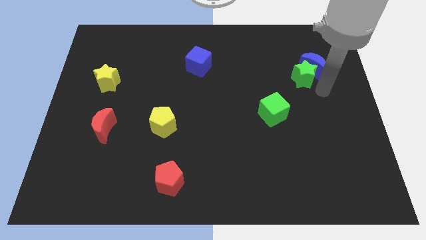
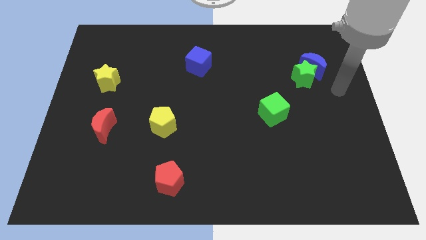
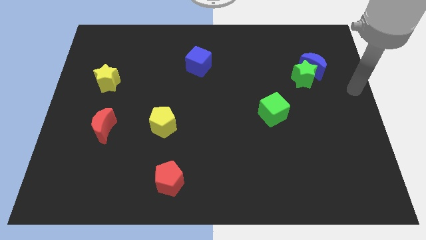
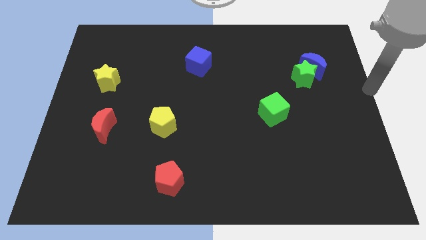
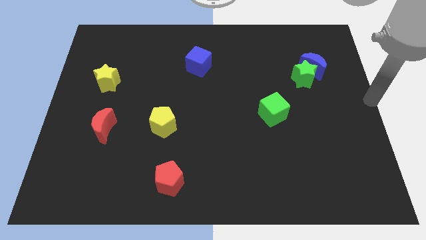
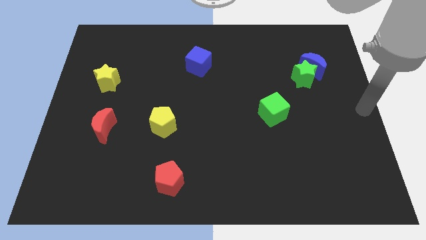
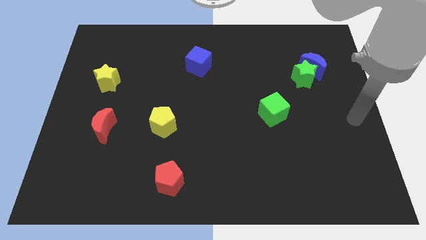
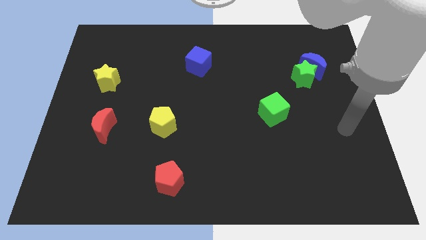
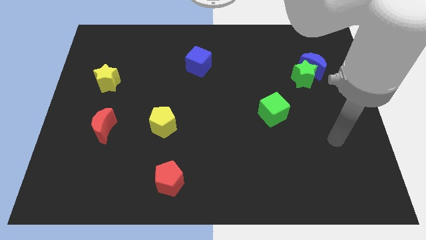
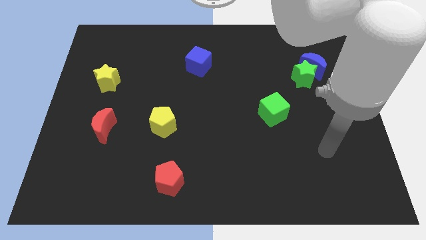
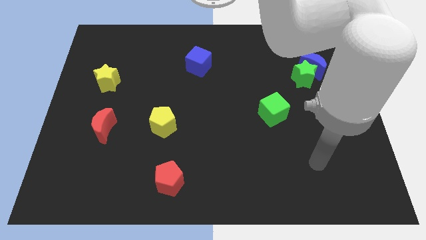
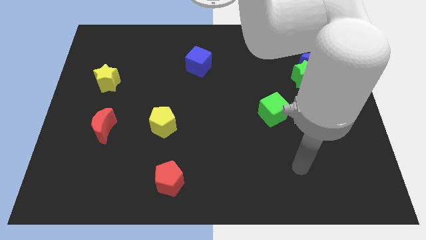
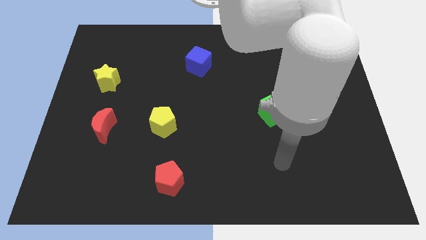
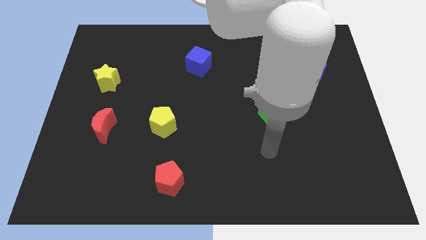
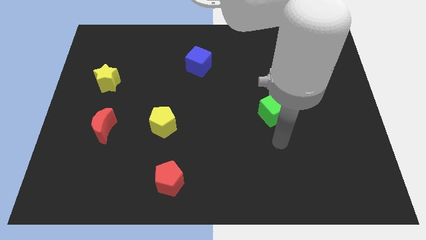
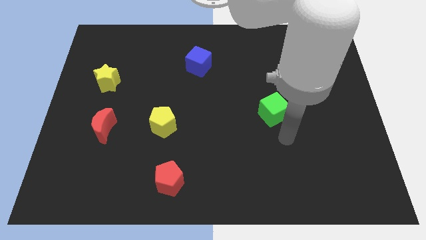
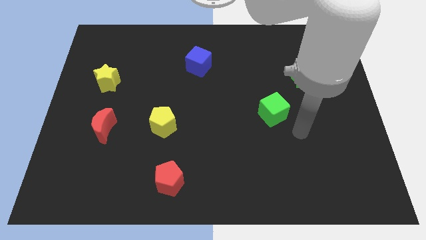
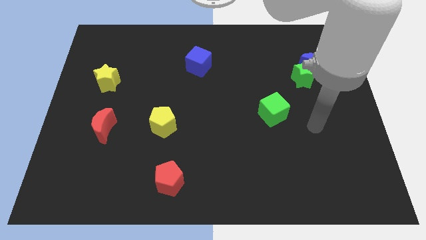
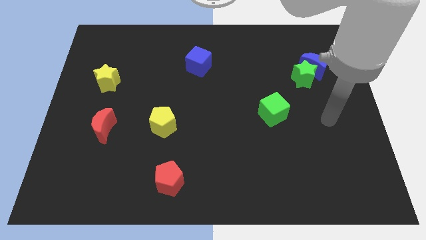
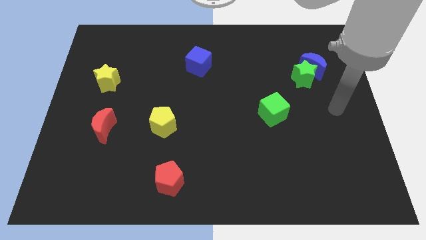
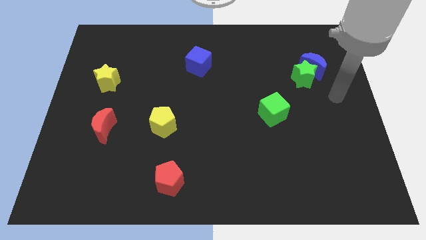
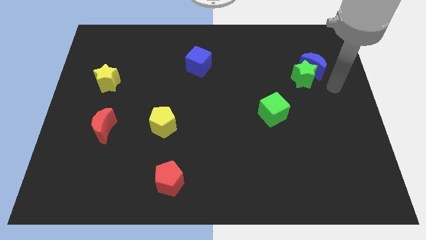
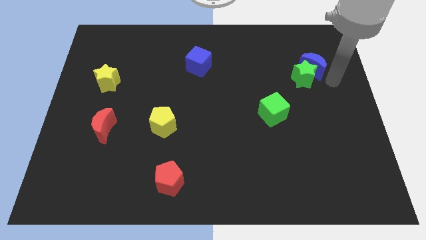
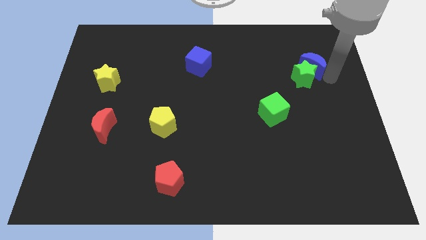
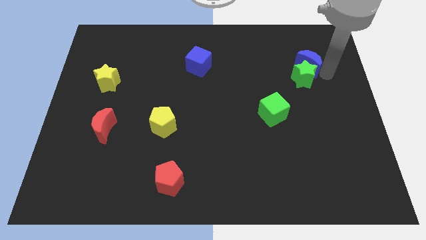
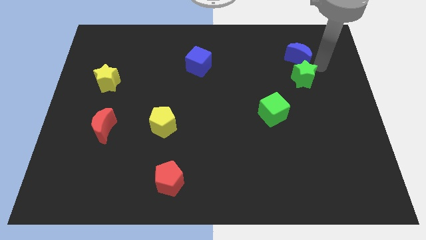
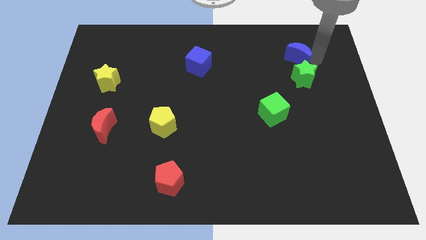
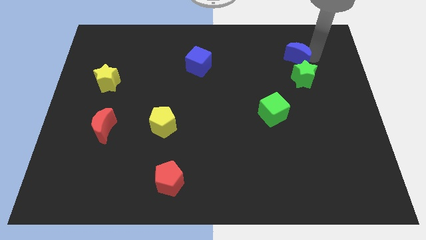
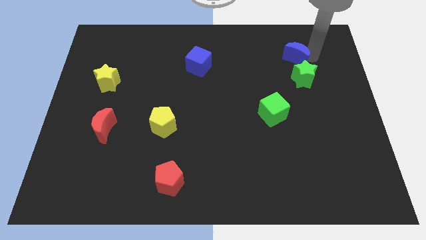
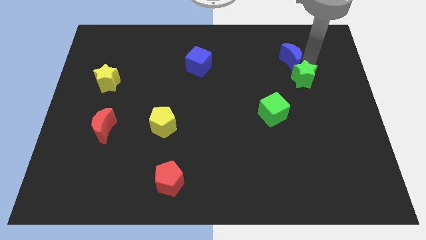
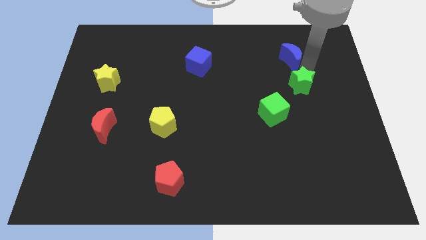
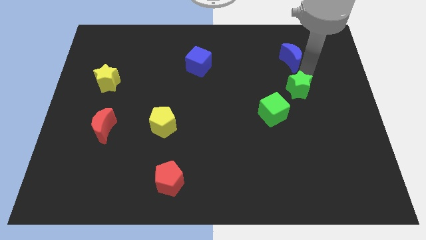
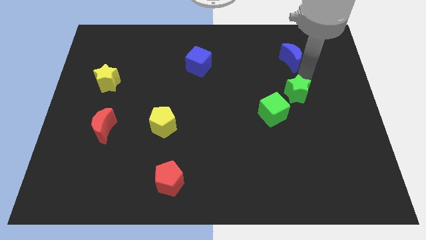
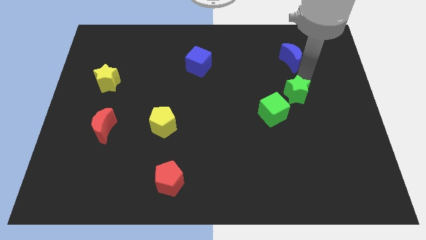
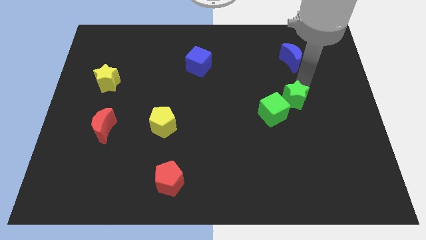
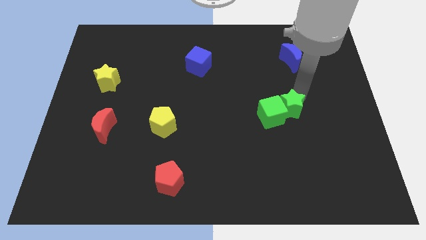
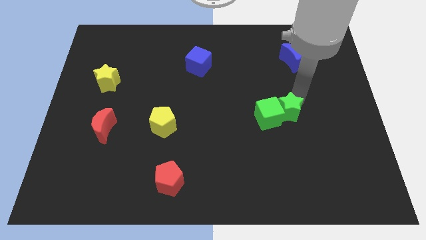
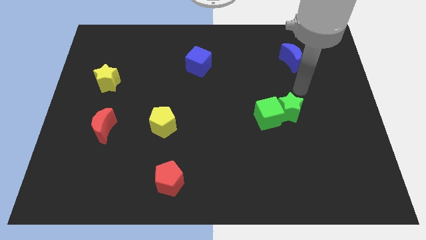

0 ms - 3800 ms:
push the green star into the green cube

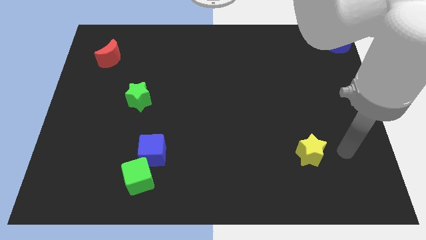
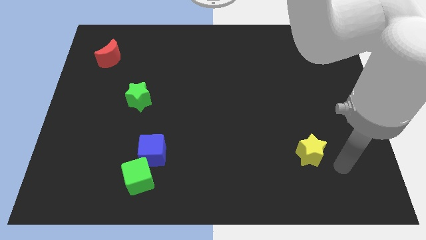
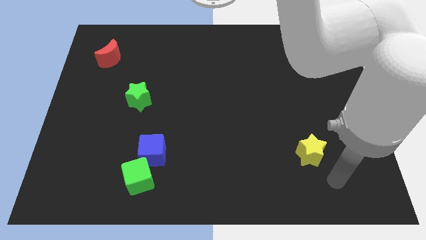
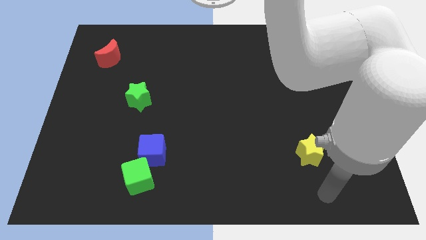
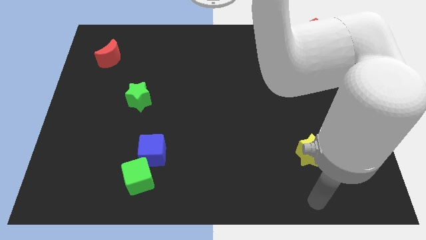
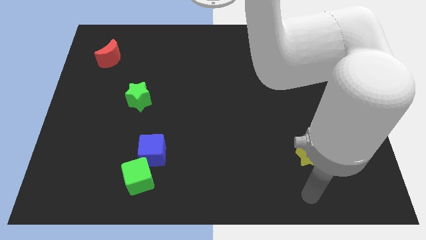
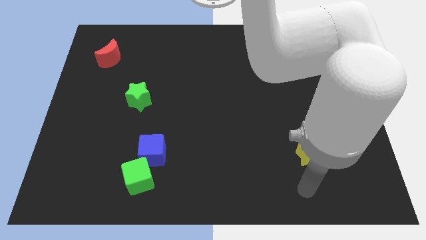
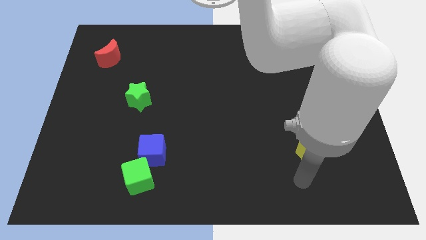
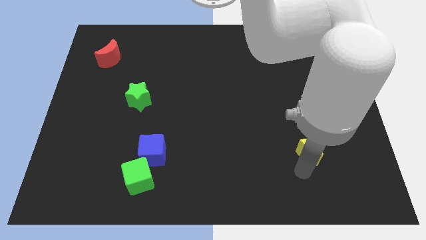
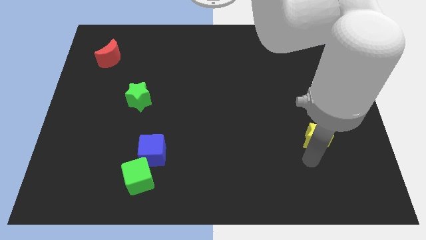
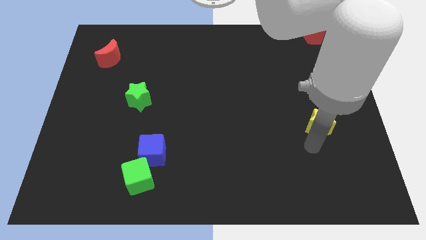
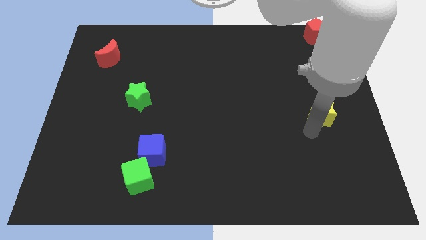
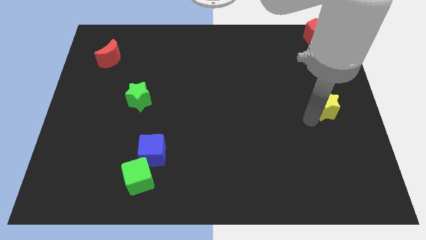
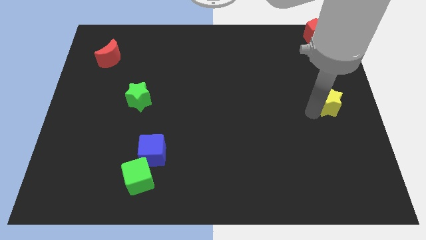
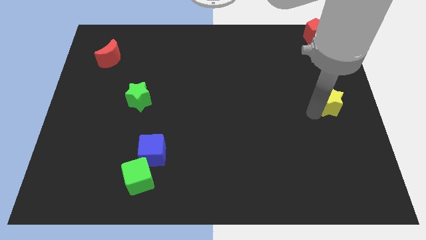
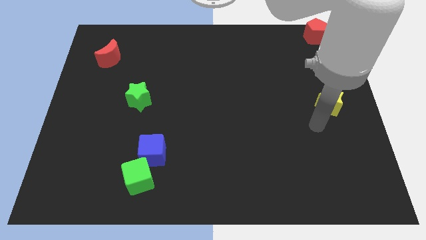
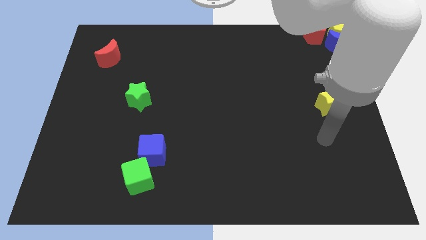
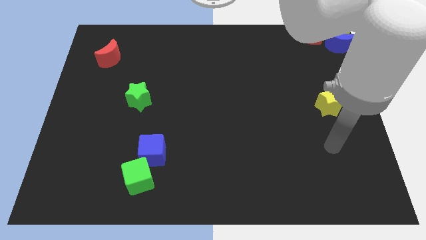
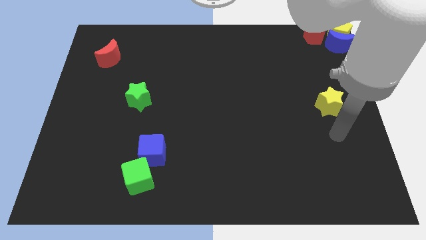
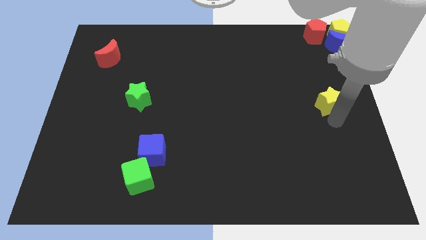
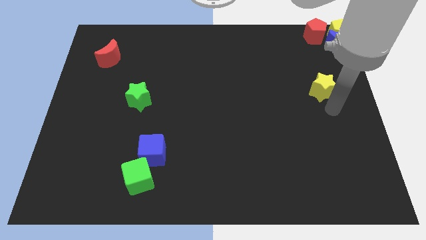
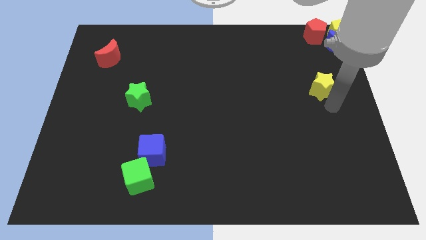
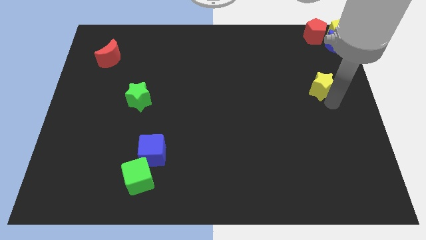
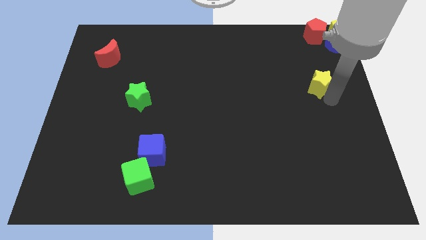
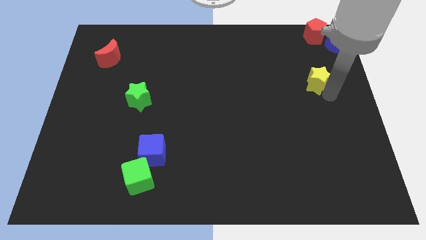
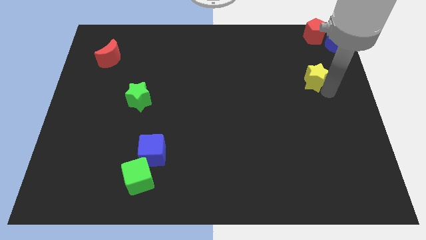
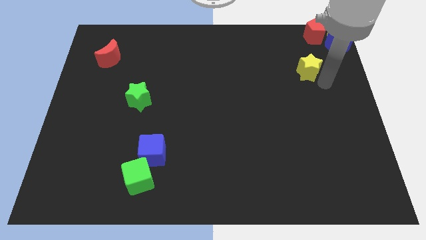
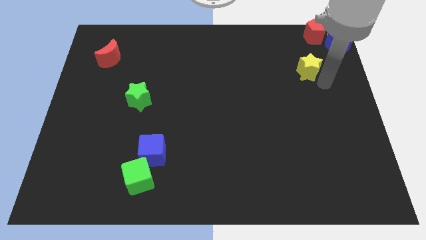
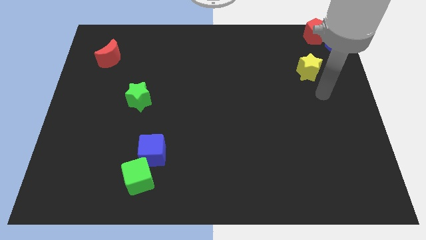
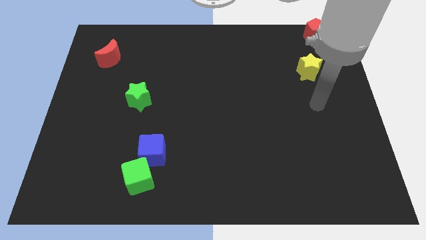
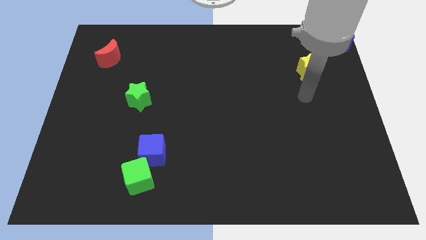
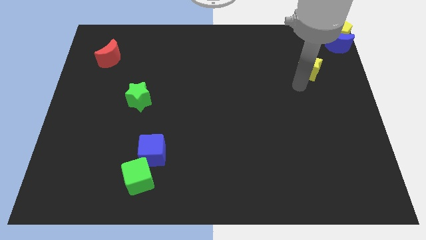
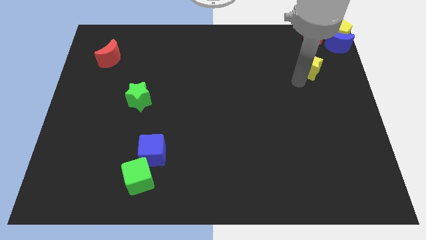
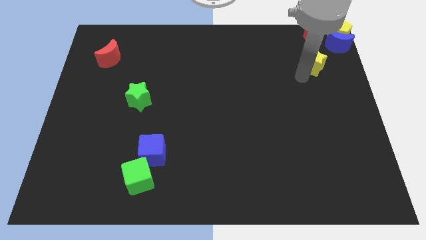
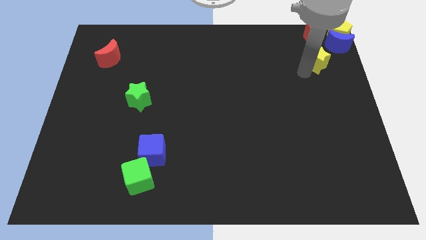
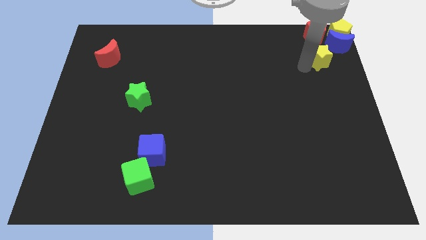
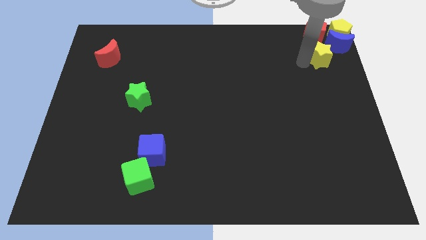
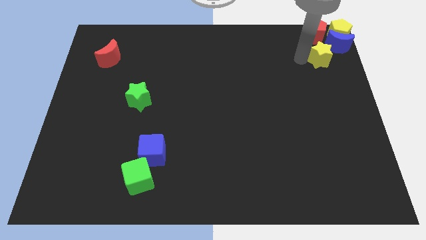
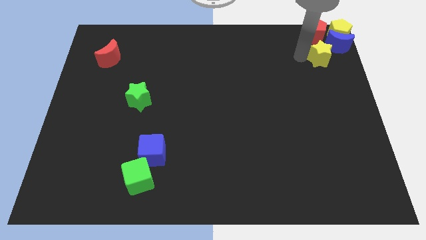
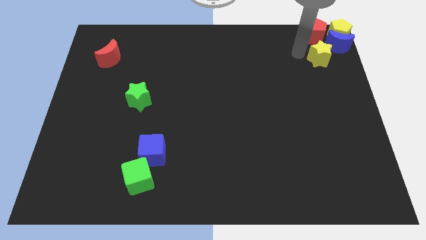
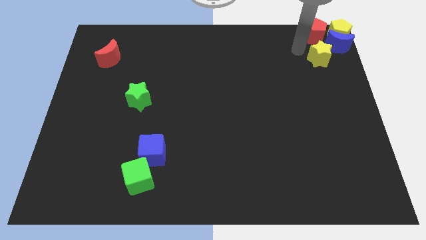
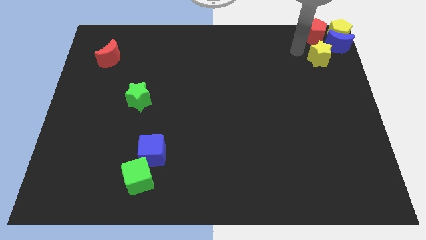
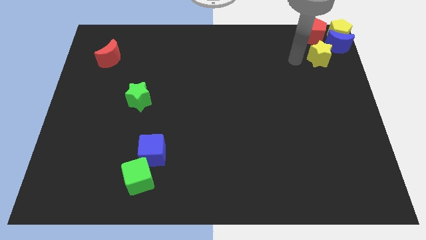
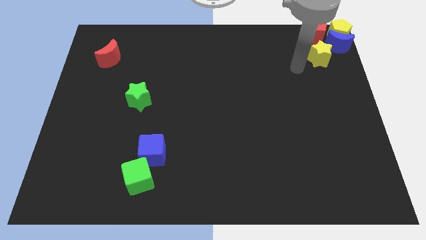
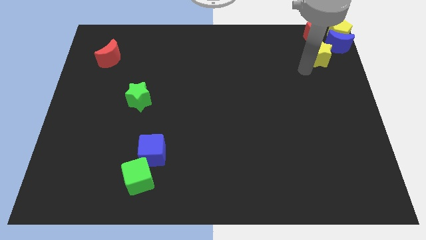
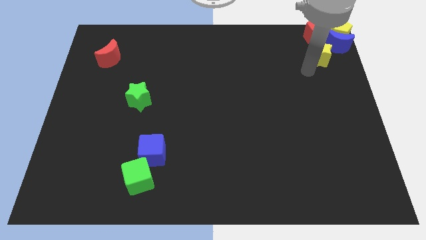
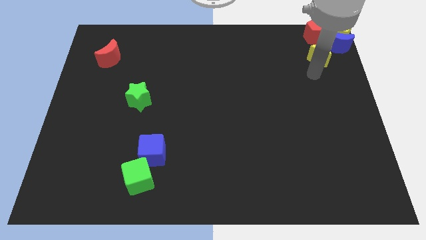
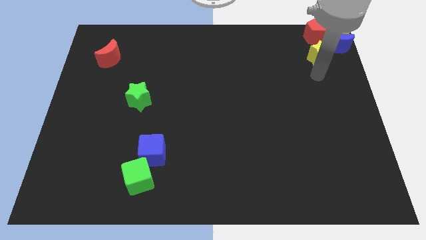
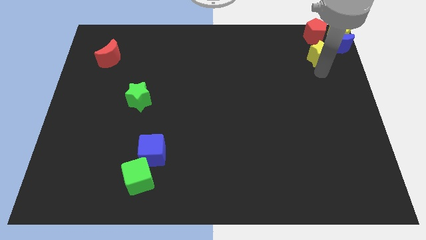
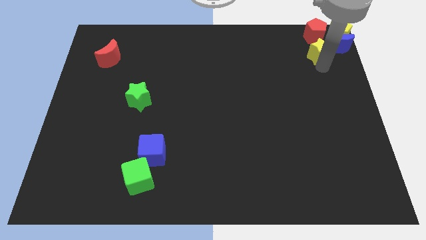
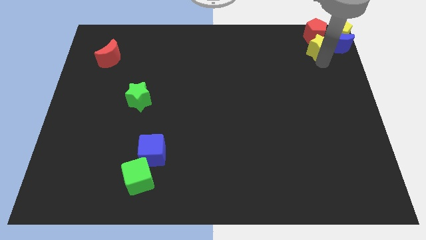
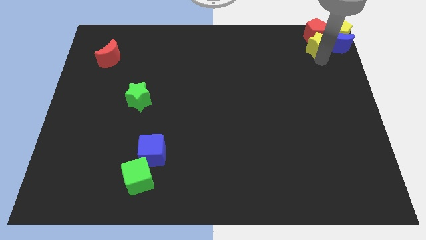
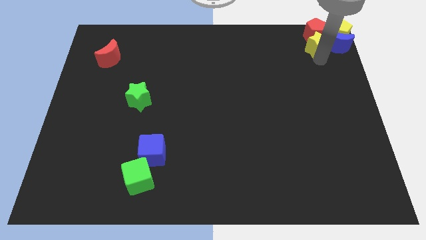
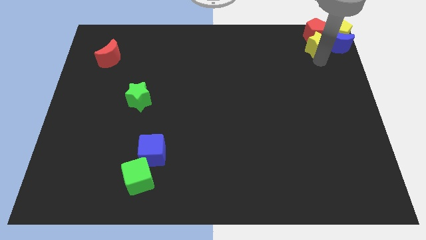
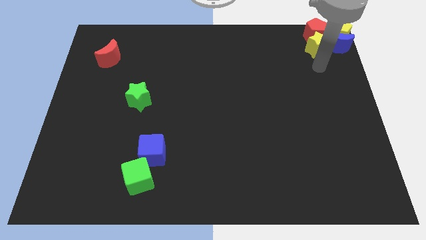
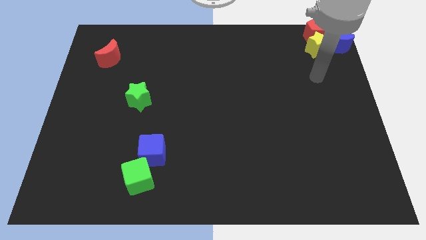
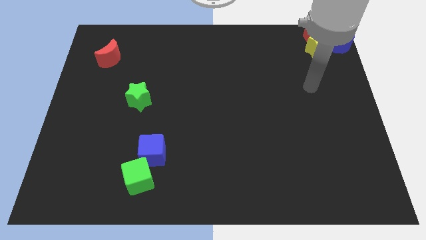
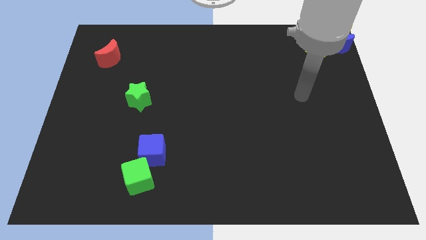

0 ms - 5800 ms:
push the yellow star to the bottom side of the red pentagon
